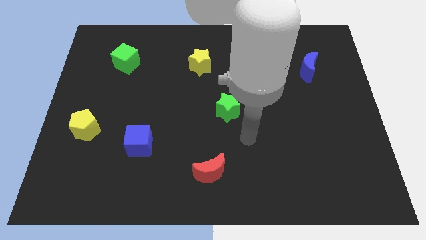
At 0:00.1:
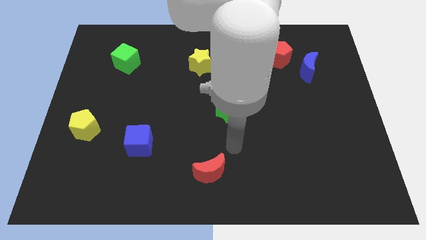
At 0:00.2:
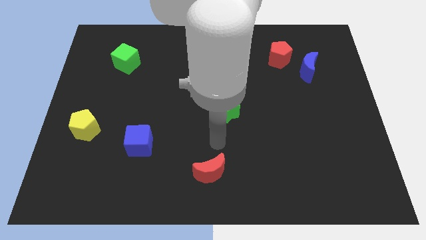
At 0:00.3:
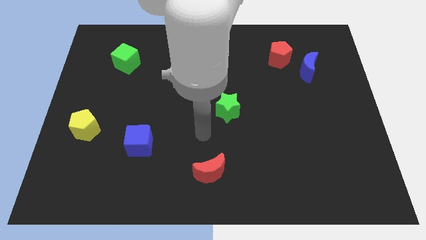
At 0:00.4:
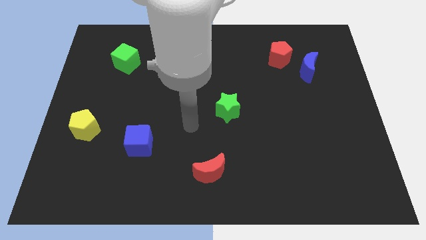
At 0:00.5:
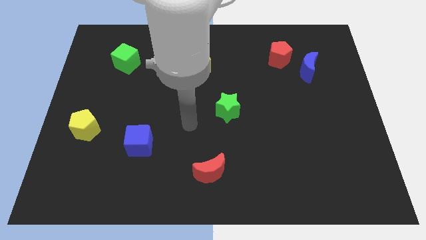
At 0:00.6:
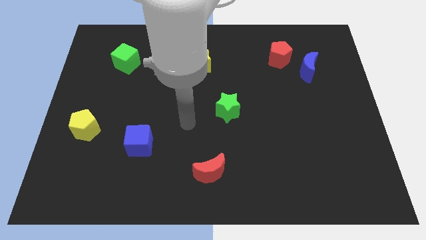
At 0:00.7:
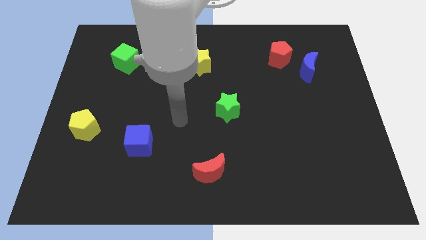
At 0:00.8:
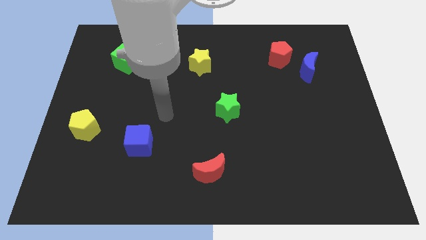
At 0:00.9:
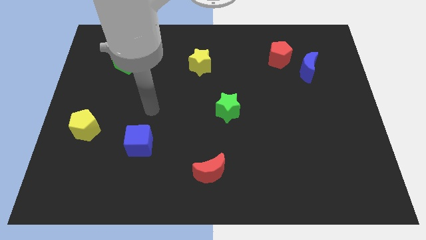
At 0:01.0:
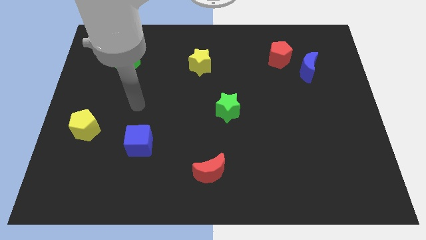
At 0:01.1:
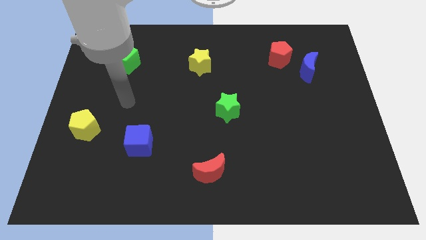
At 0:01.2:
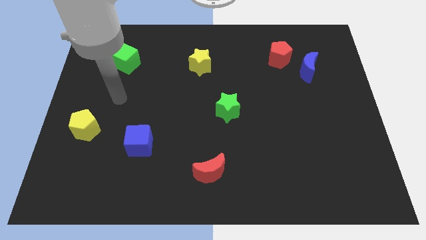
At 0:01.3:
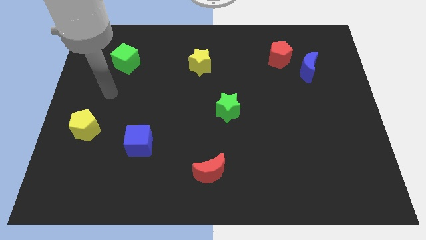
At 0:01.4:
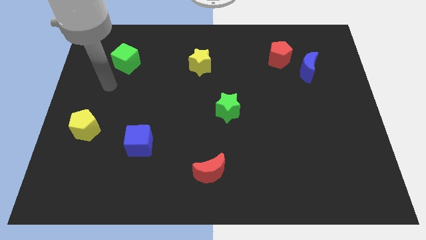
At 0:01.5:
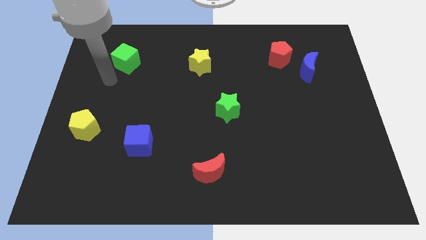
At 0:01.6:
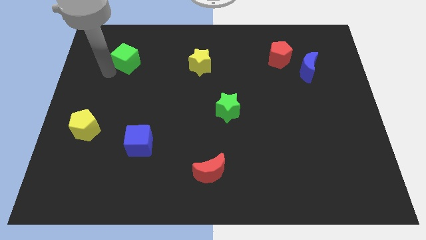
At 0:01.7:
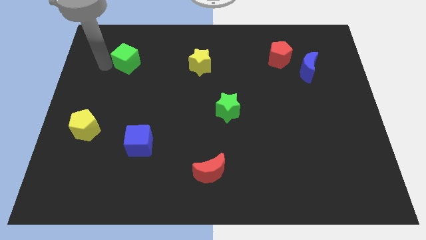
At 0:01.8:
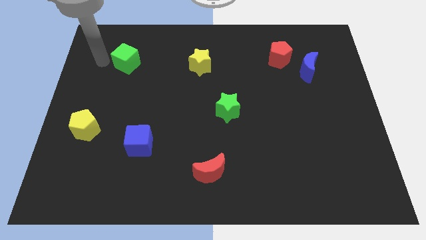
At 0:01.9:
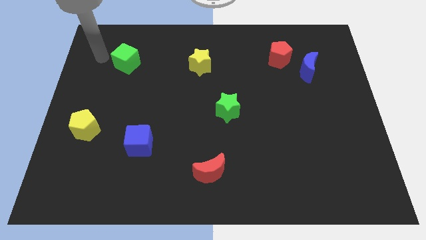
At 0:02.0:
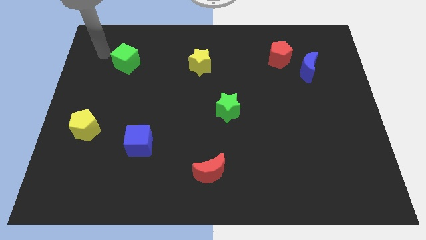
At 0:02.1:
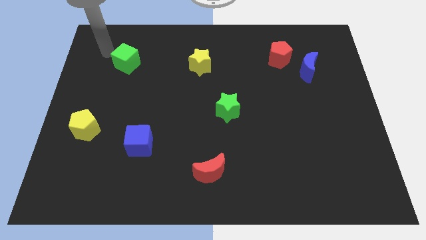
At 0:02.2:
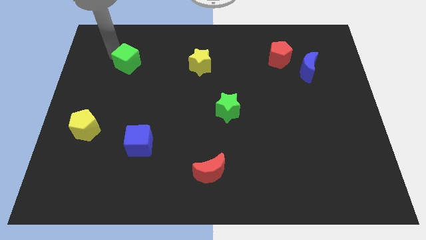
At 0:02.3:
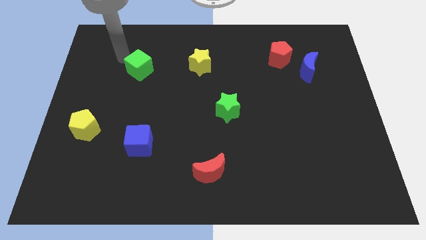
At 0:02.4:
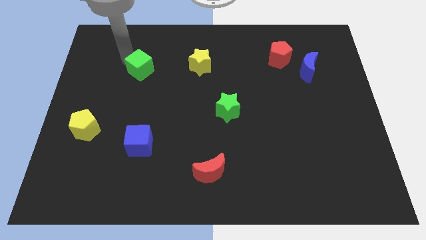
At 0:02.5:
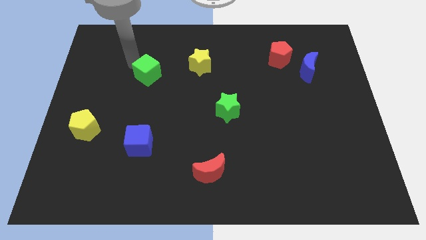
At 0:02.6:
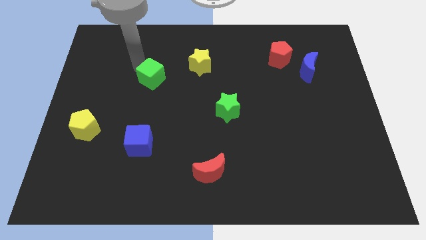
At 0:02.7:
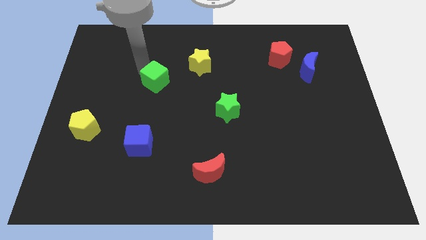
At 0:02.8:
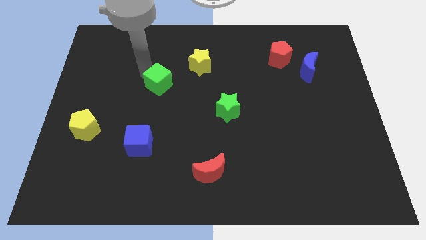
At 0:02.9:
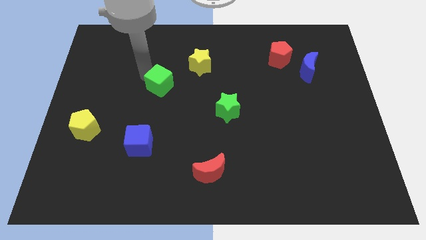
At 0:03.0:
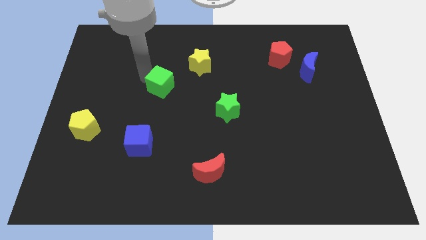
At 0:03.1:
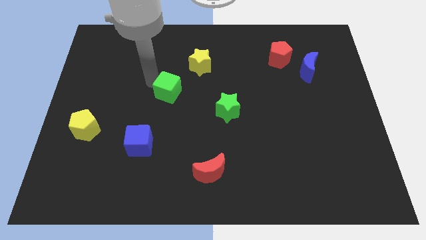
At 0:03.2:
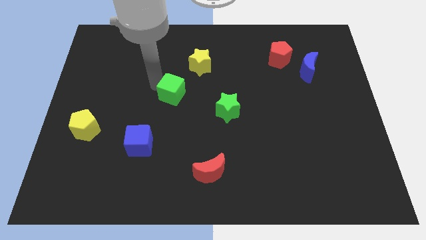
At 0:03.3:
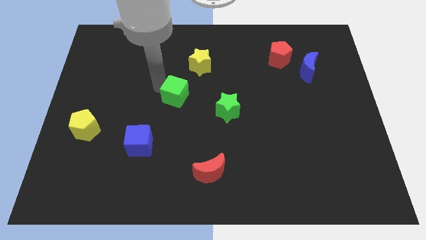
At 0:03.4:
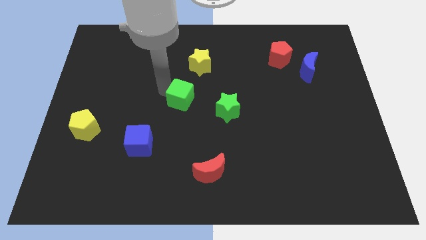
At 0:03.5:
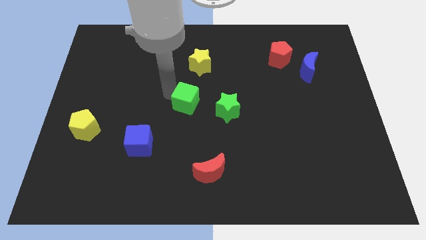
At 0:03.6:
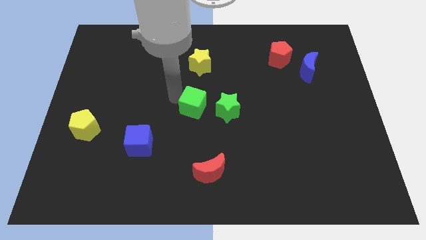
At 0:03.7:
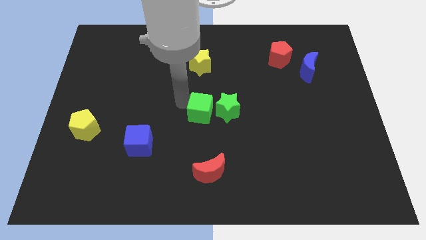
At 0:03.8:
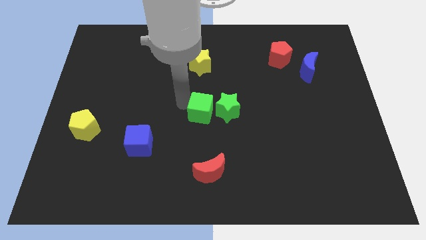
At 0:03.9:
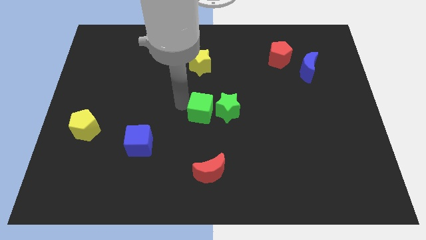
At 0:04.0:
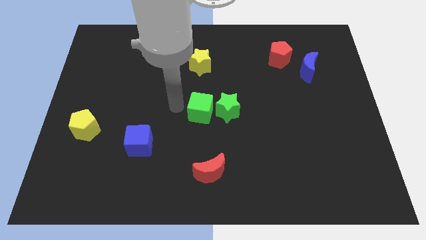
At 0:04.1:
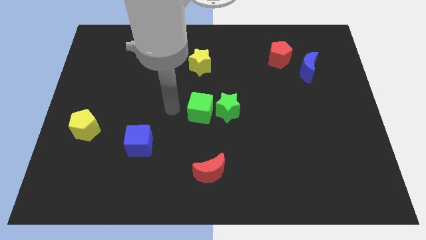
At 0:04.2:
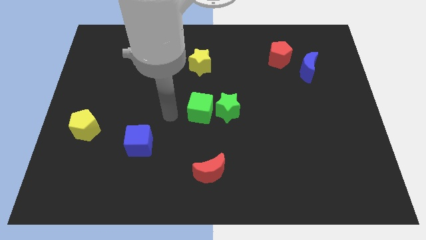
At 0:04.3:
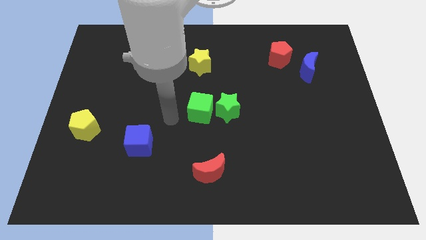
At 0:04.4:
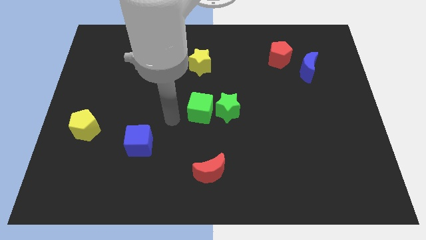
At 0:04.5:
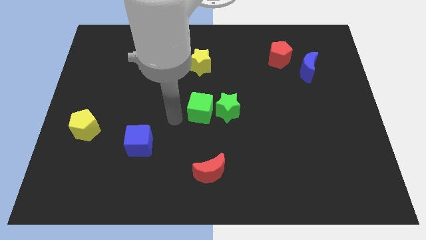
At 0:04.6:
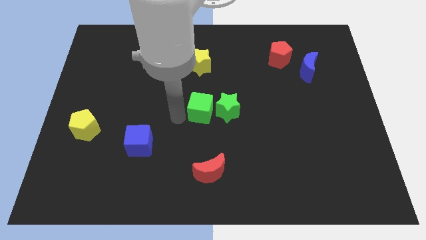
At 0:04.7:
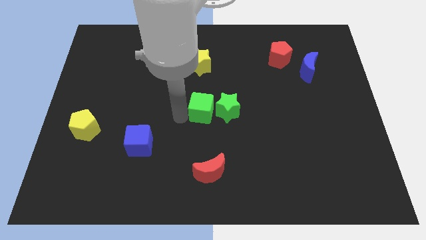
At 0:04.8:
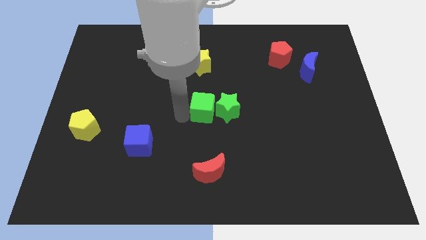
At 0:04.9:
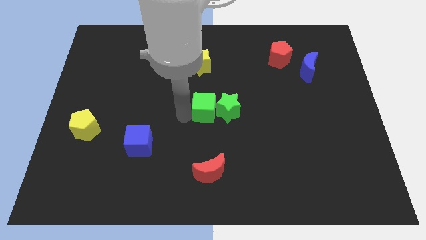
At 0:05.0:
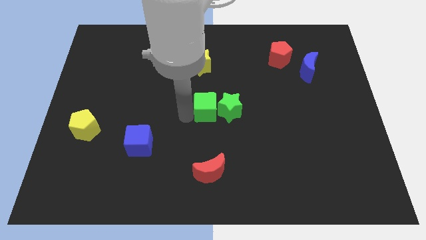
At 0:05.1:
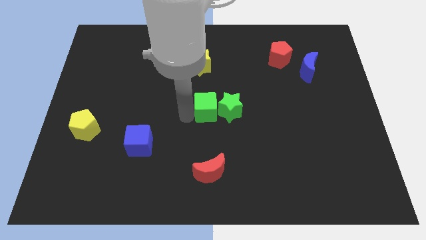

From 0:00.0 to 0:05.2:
push the green cube into the left side of the green star

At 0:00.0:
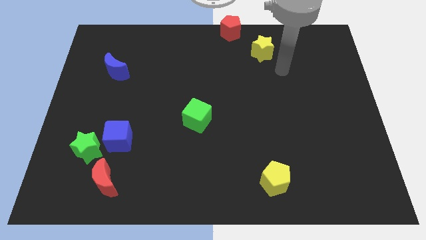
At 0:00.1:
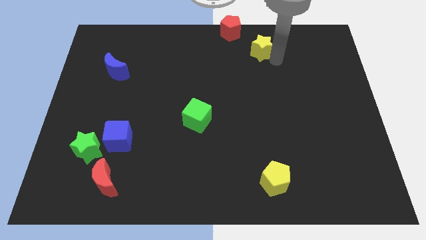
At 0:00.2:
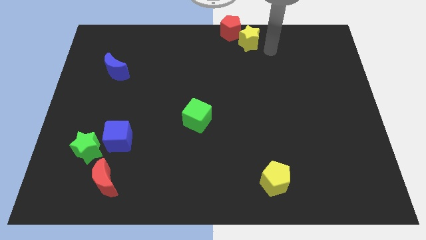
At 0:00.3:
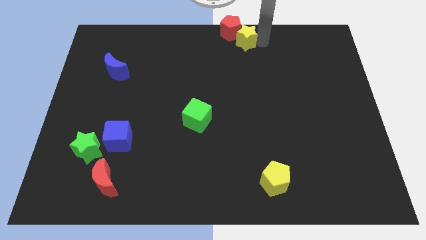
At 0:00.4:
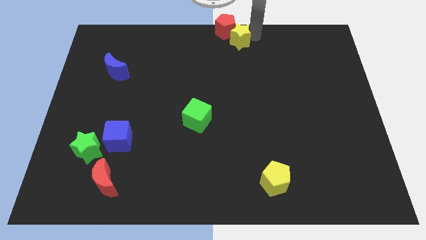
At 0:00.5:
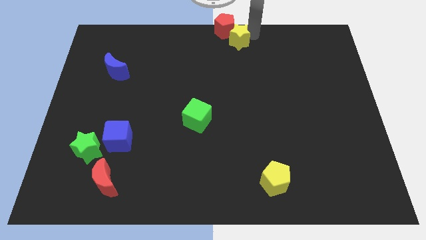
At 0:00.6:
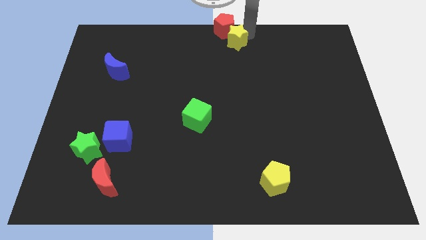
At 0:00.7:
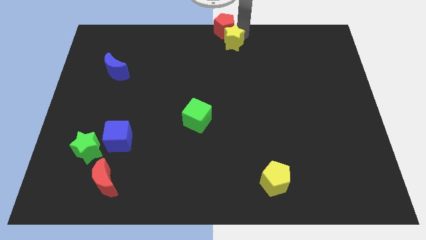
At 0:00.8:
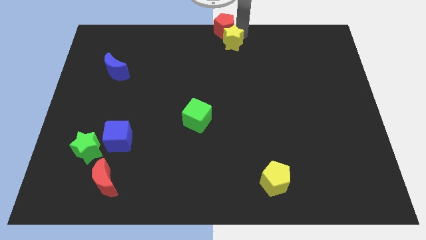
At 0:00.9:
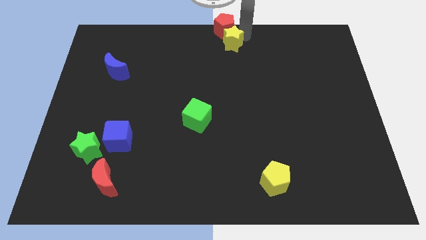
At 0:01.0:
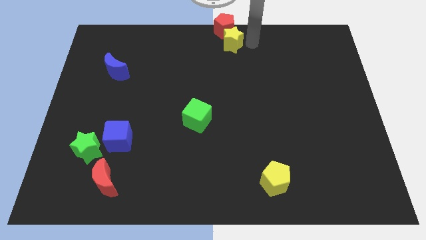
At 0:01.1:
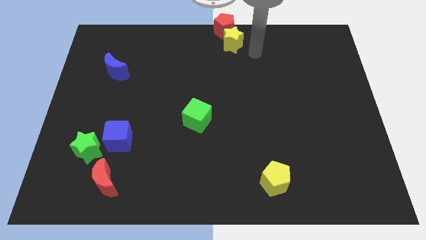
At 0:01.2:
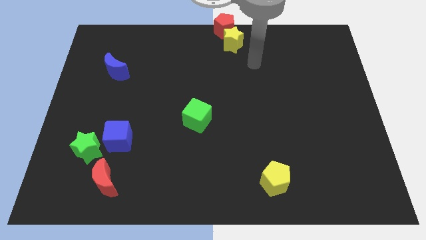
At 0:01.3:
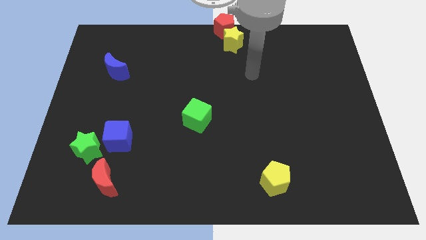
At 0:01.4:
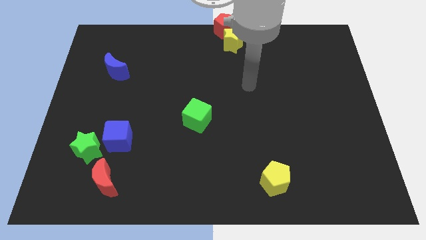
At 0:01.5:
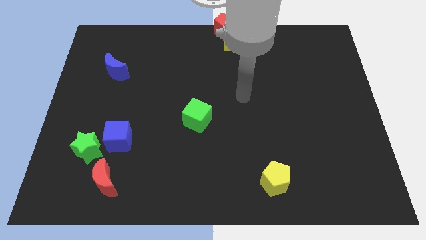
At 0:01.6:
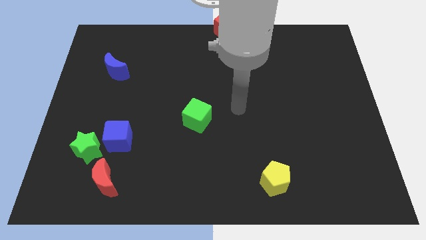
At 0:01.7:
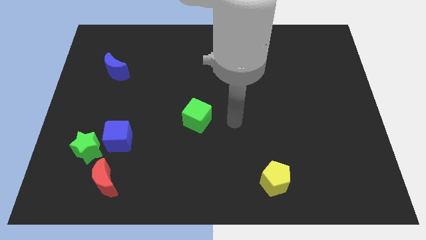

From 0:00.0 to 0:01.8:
put the yellow star under the red pentagon

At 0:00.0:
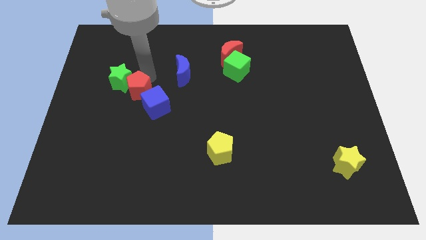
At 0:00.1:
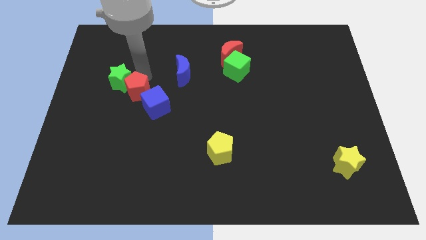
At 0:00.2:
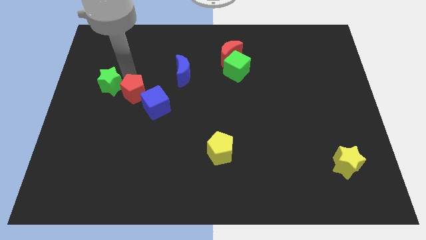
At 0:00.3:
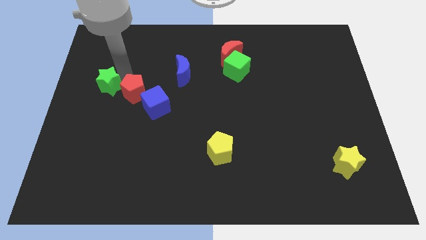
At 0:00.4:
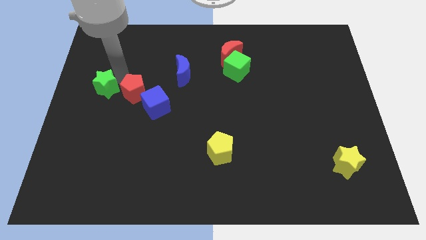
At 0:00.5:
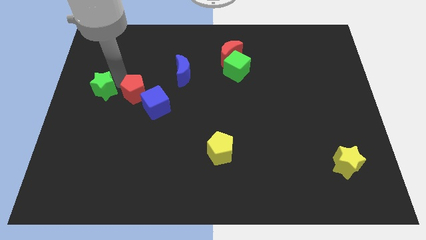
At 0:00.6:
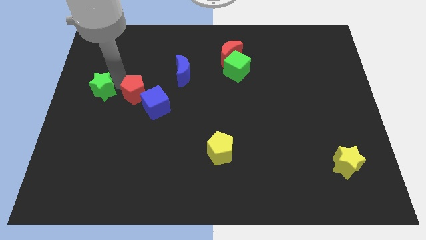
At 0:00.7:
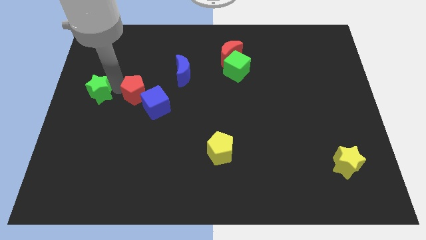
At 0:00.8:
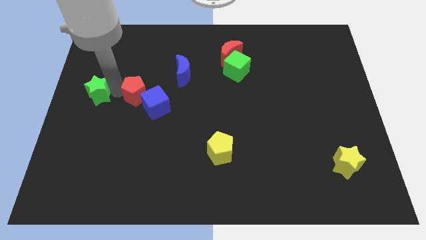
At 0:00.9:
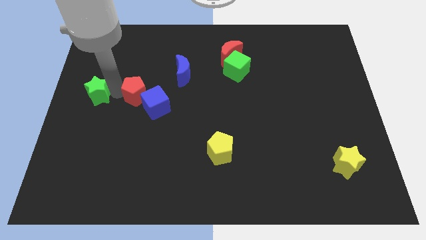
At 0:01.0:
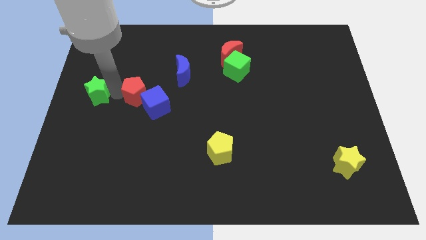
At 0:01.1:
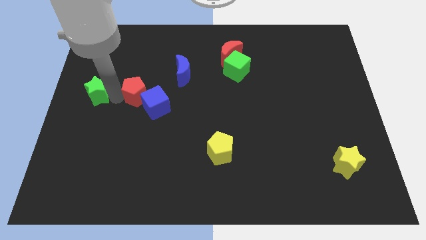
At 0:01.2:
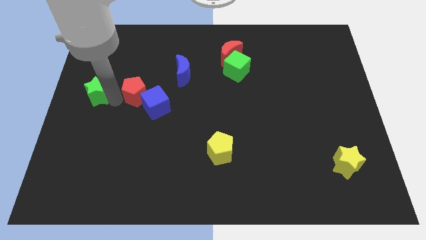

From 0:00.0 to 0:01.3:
seperate green star and red pentagon

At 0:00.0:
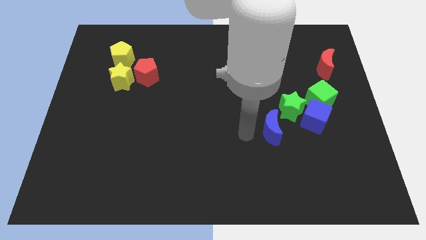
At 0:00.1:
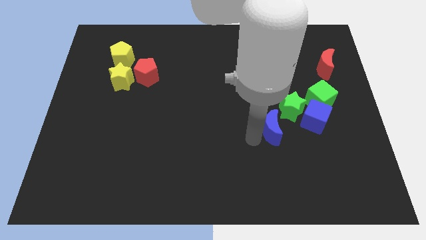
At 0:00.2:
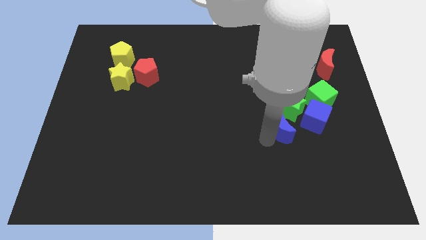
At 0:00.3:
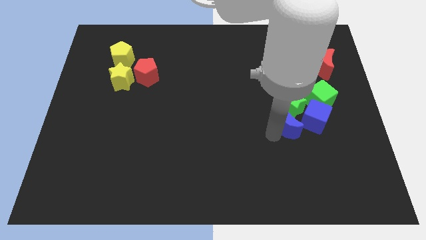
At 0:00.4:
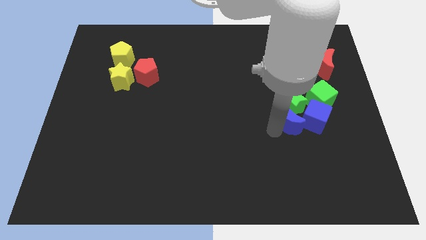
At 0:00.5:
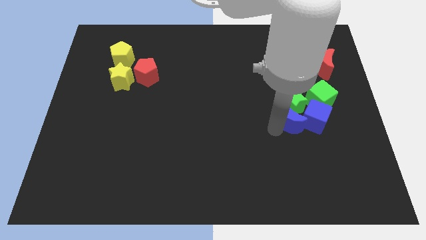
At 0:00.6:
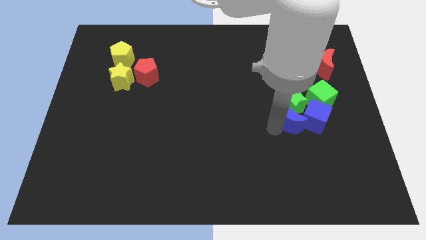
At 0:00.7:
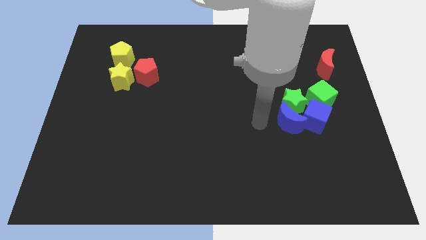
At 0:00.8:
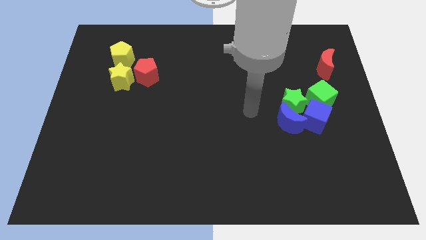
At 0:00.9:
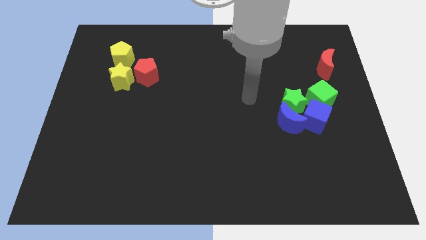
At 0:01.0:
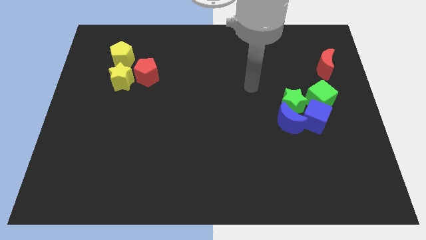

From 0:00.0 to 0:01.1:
place the blue crescent into the green star
